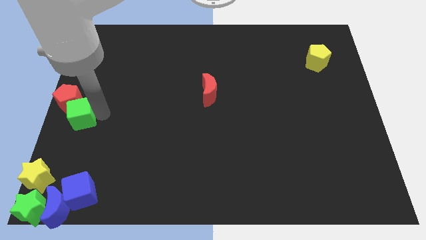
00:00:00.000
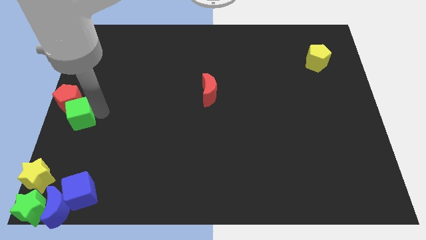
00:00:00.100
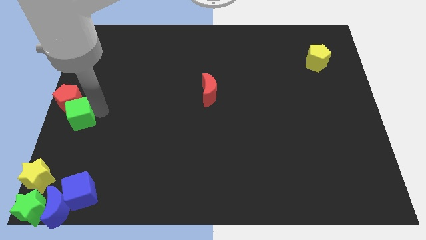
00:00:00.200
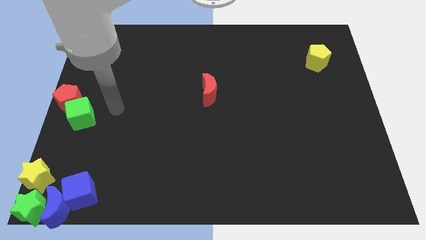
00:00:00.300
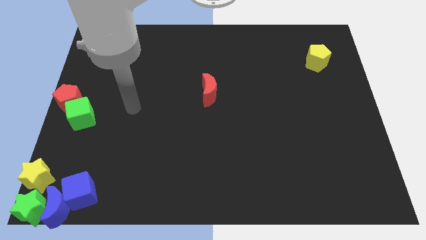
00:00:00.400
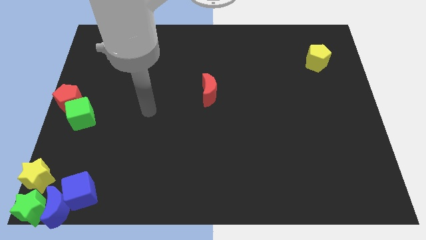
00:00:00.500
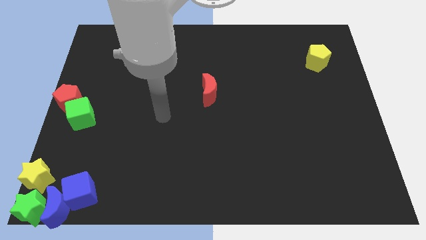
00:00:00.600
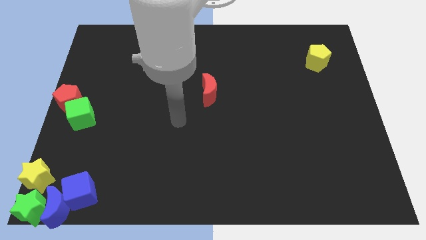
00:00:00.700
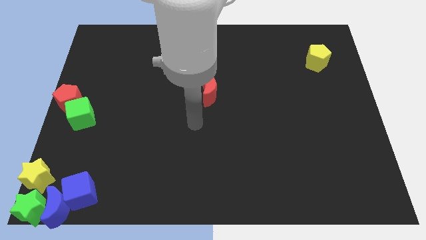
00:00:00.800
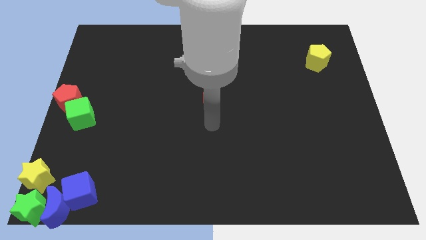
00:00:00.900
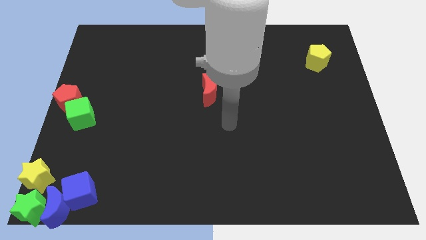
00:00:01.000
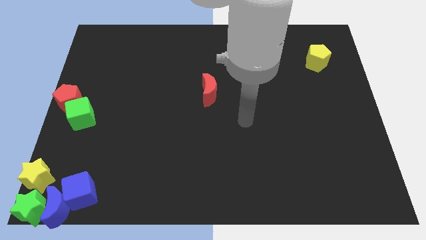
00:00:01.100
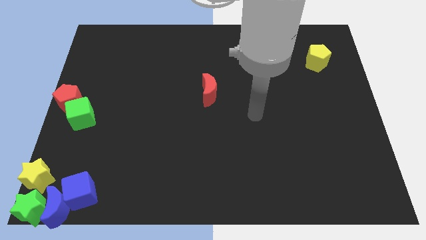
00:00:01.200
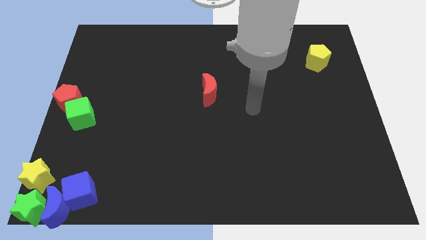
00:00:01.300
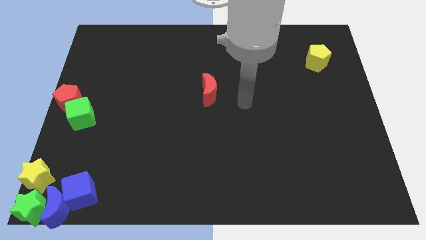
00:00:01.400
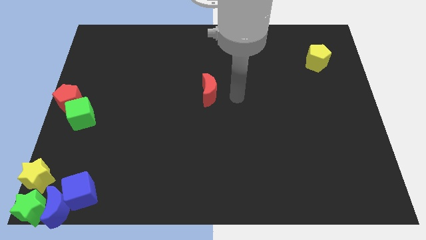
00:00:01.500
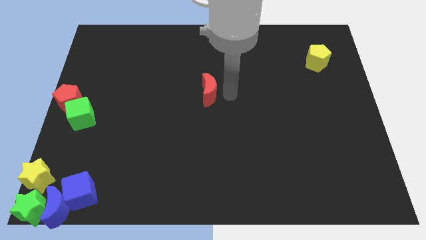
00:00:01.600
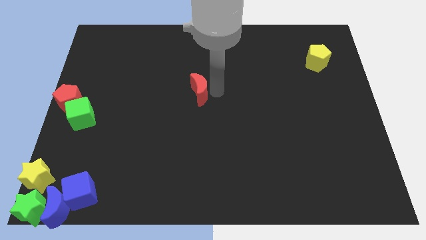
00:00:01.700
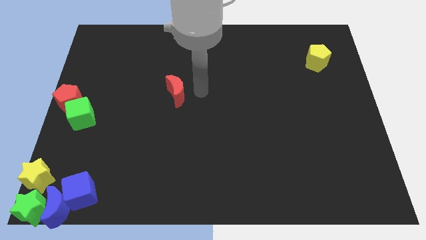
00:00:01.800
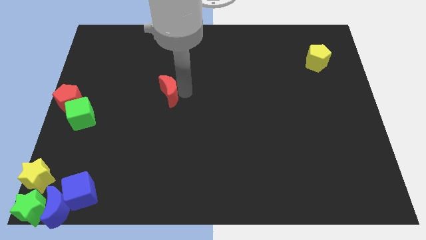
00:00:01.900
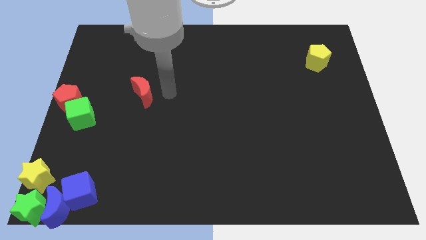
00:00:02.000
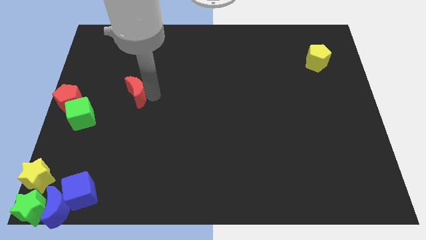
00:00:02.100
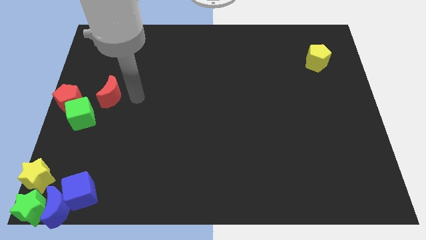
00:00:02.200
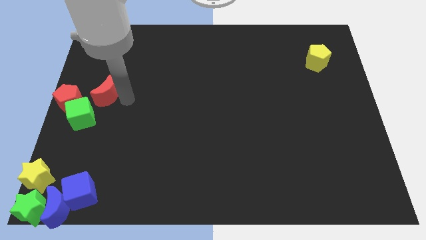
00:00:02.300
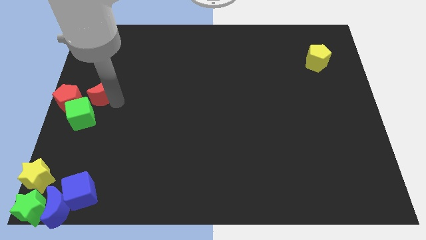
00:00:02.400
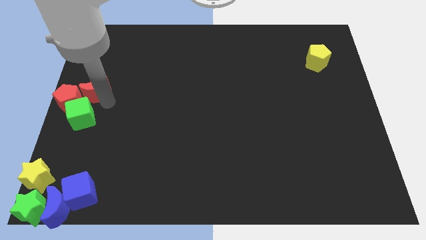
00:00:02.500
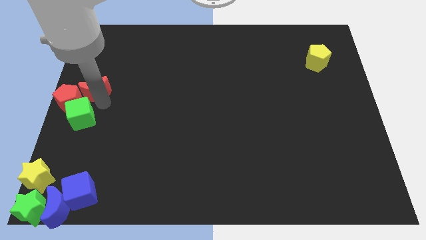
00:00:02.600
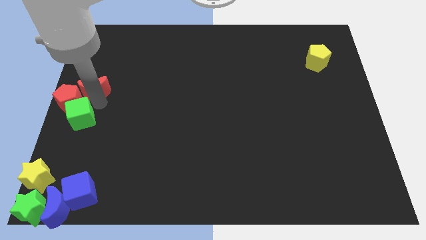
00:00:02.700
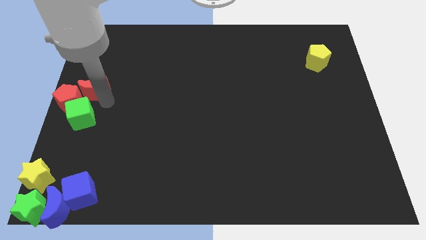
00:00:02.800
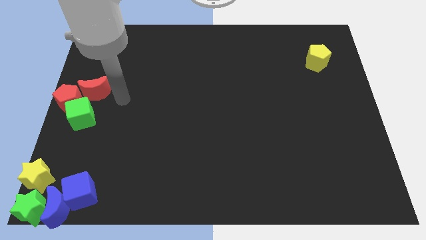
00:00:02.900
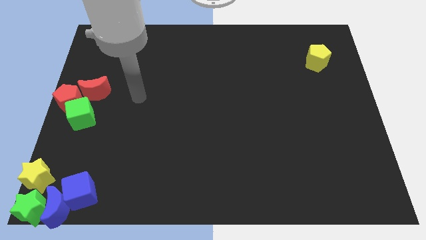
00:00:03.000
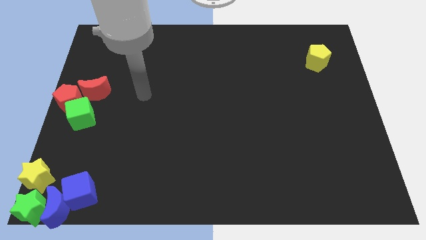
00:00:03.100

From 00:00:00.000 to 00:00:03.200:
put the red moon at the right side of the red pentagon

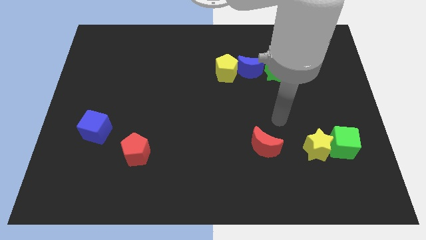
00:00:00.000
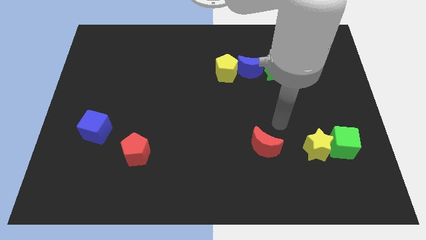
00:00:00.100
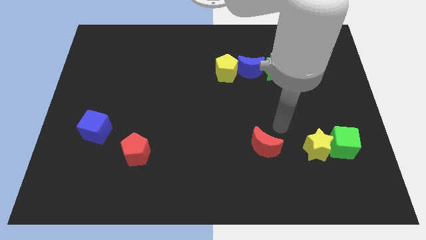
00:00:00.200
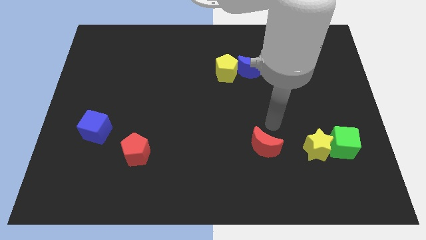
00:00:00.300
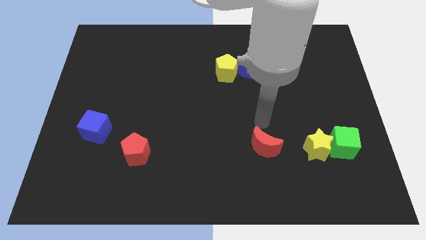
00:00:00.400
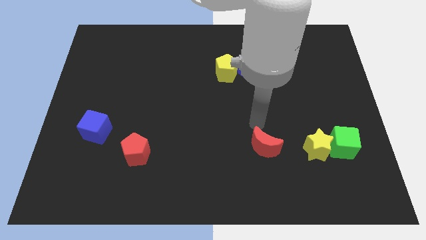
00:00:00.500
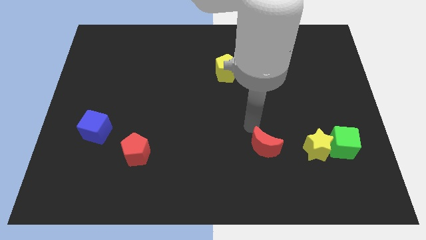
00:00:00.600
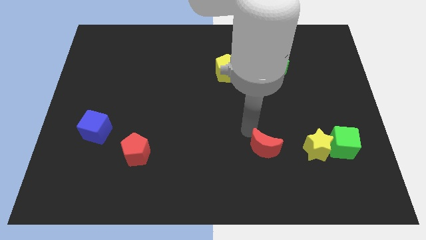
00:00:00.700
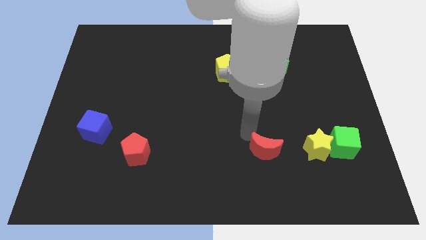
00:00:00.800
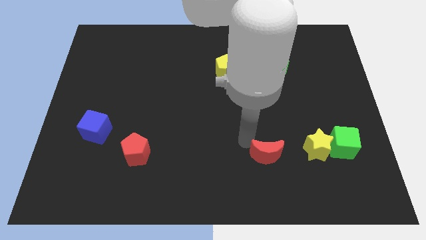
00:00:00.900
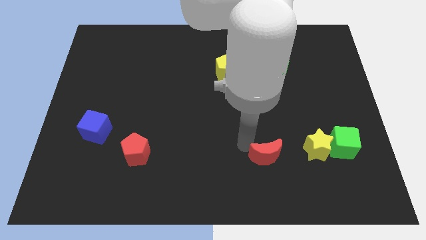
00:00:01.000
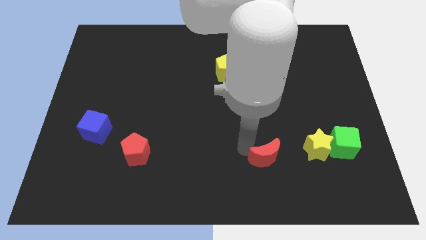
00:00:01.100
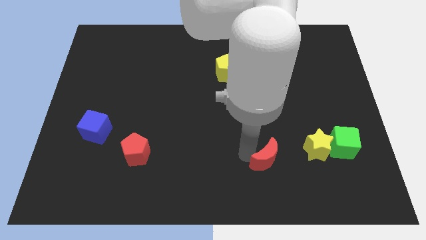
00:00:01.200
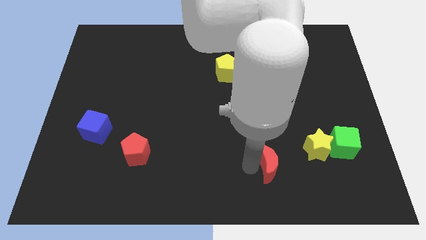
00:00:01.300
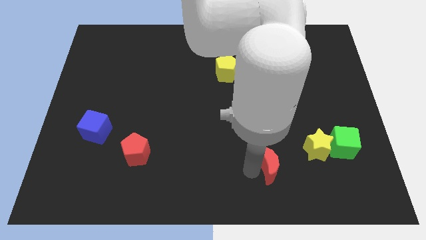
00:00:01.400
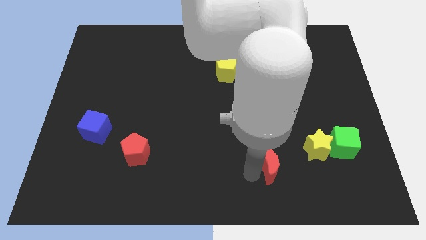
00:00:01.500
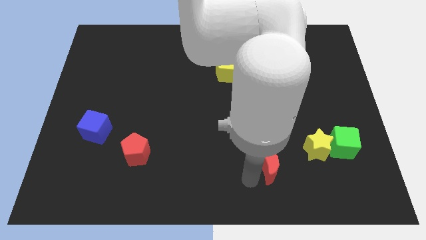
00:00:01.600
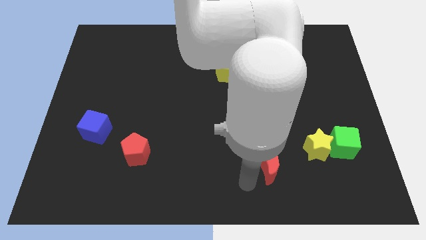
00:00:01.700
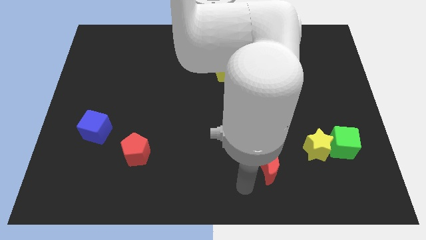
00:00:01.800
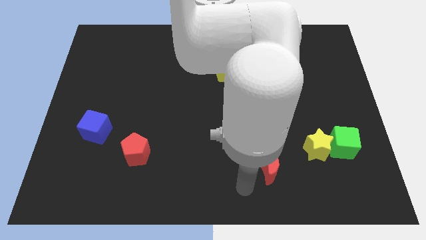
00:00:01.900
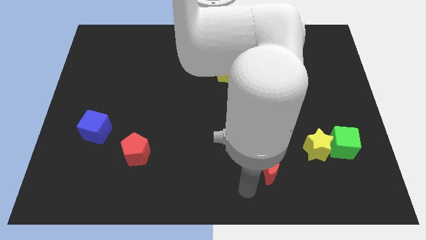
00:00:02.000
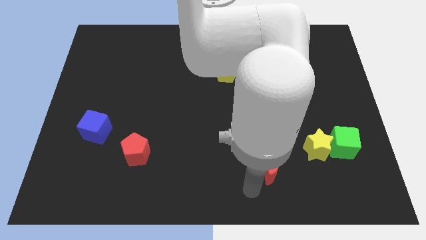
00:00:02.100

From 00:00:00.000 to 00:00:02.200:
push the red moon to the left of the yellow star

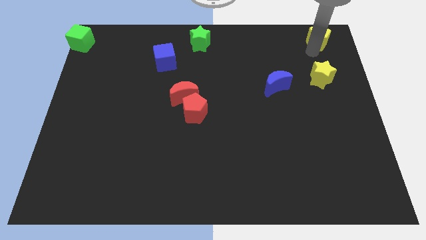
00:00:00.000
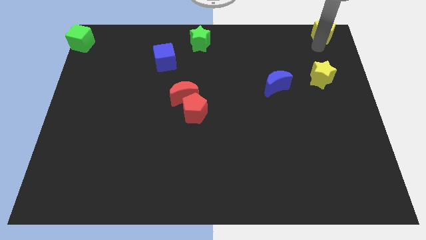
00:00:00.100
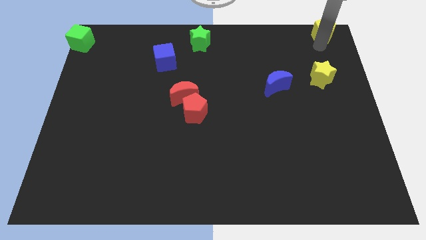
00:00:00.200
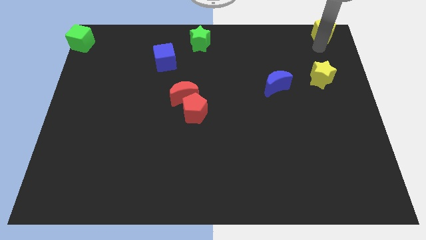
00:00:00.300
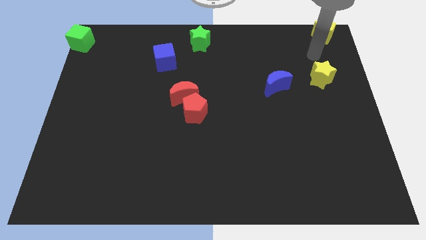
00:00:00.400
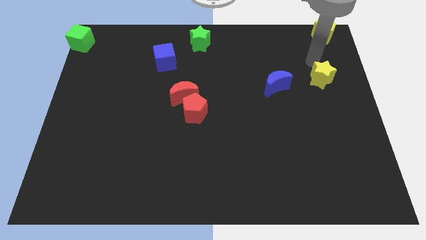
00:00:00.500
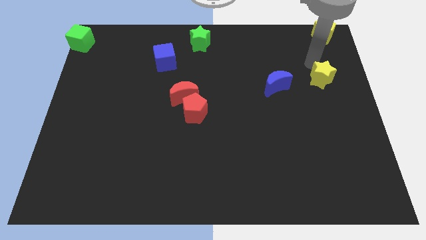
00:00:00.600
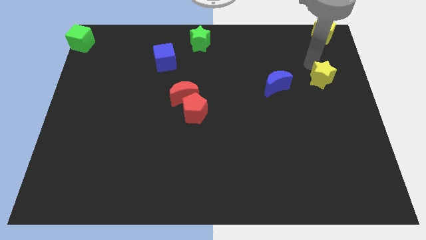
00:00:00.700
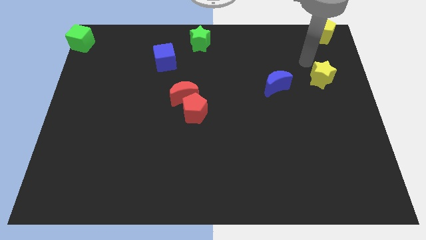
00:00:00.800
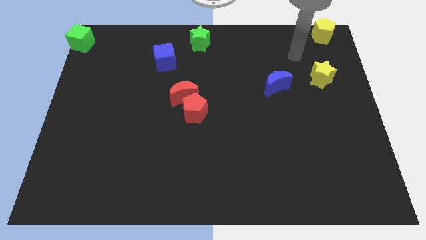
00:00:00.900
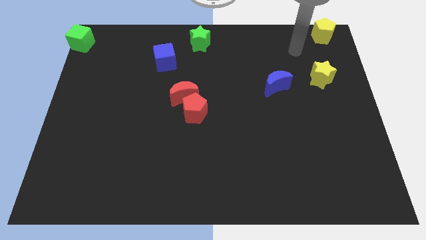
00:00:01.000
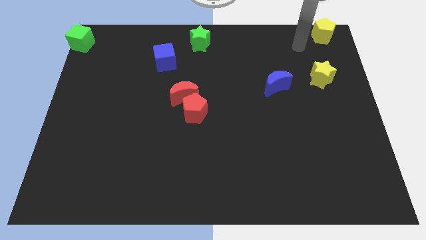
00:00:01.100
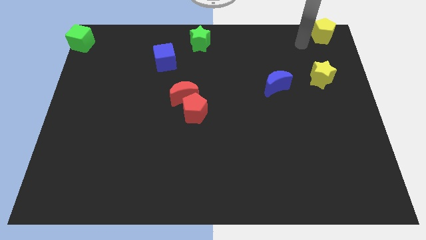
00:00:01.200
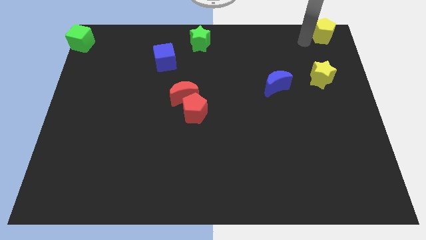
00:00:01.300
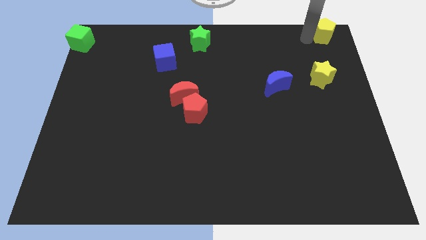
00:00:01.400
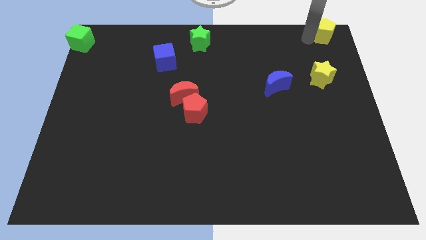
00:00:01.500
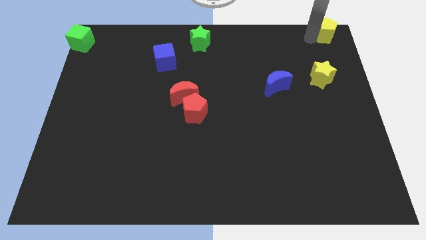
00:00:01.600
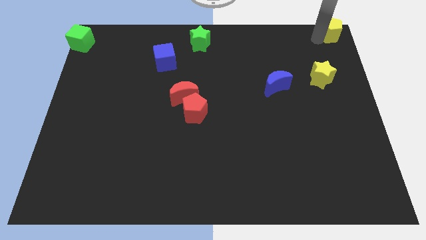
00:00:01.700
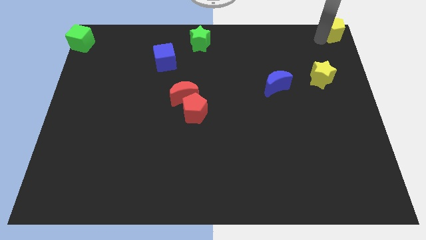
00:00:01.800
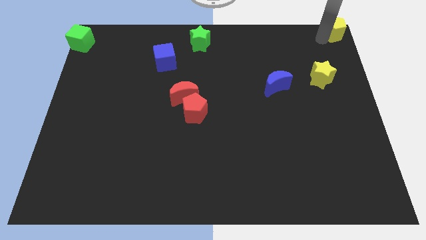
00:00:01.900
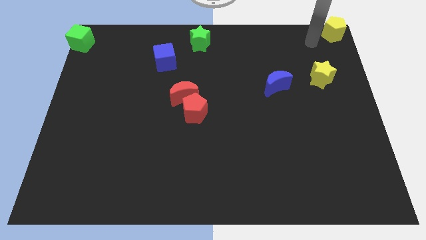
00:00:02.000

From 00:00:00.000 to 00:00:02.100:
place the yellow pentagon at the top right corner

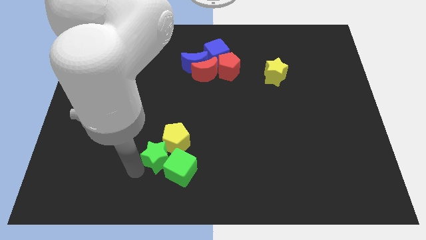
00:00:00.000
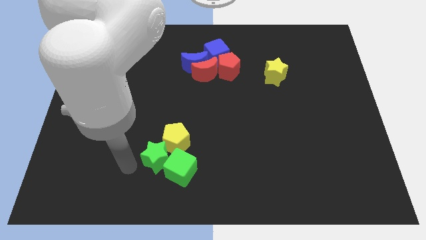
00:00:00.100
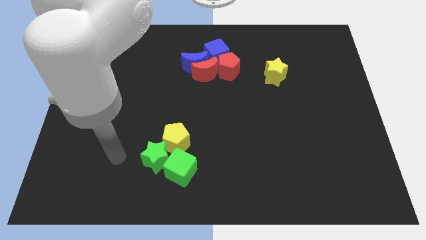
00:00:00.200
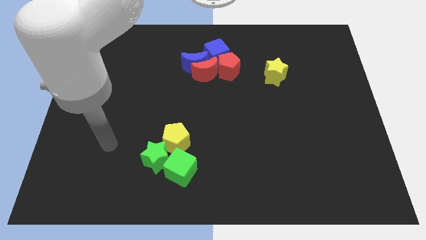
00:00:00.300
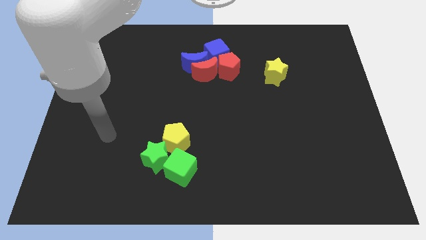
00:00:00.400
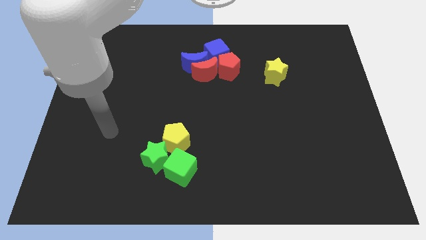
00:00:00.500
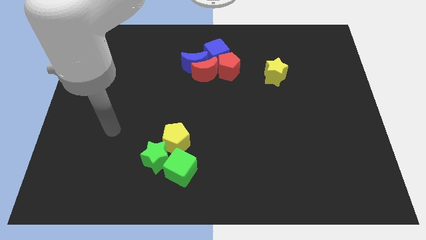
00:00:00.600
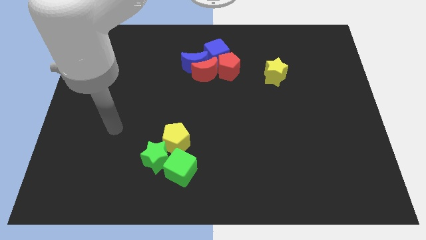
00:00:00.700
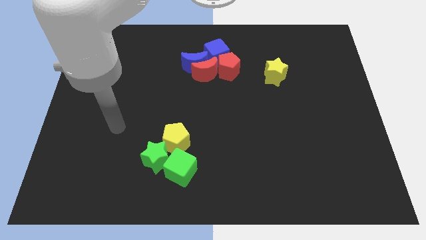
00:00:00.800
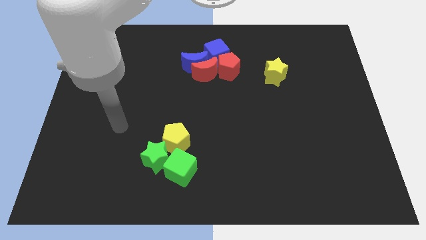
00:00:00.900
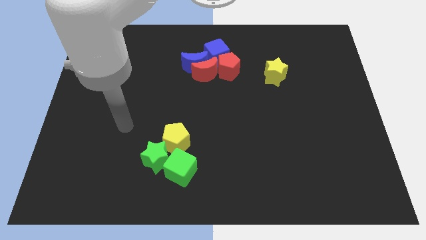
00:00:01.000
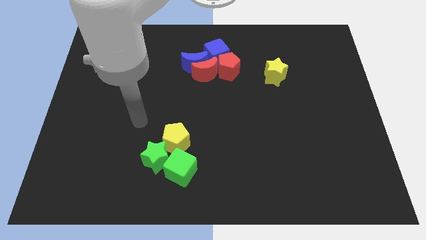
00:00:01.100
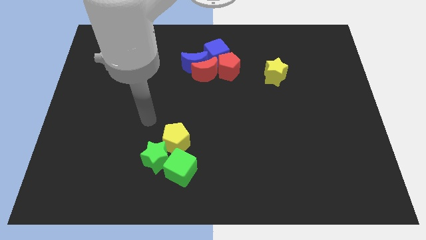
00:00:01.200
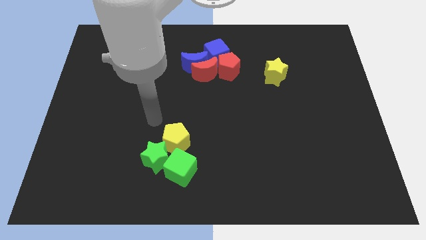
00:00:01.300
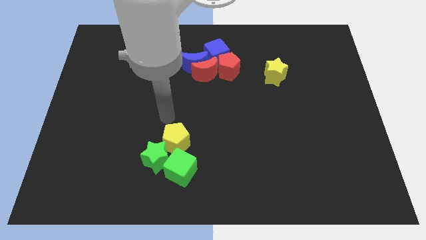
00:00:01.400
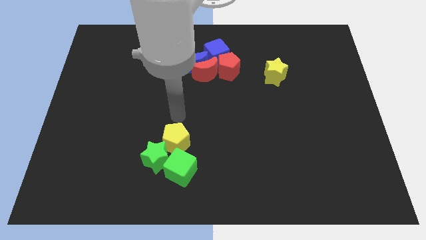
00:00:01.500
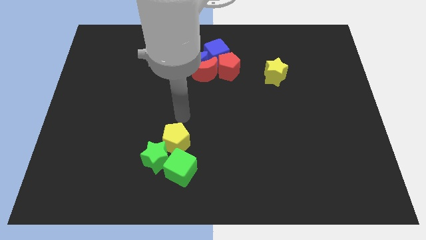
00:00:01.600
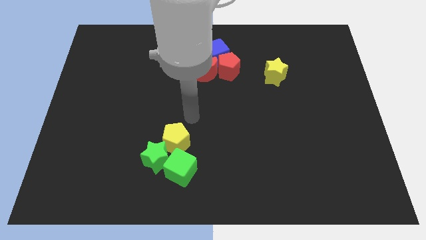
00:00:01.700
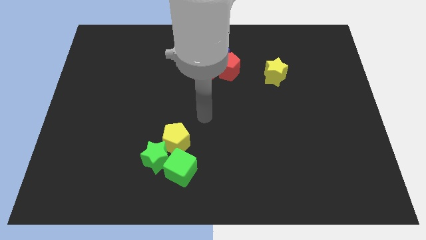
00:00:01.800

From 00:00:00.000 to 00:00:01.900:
move the arm away from the green star
